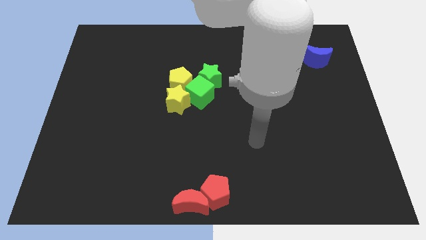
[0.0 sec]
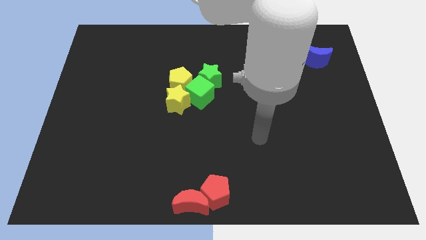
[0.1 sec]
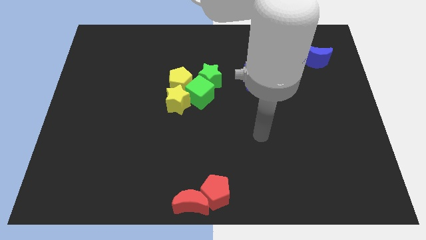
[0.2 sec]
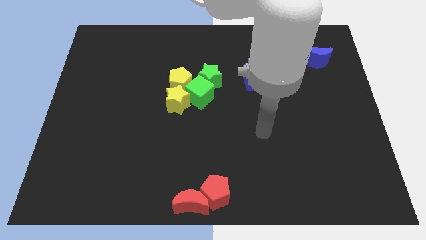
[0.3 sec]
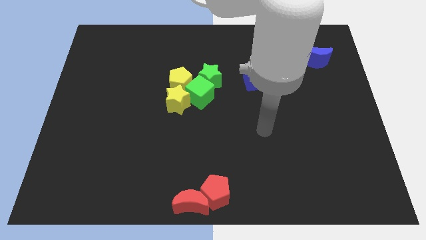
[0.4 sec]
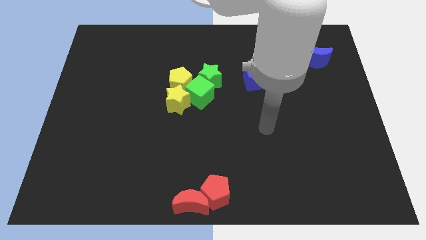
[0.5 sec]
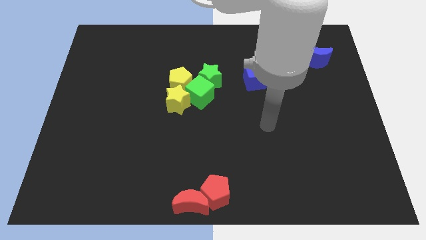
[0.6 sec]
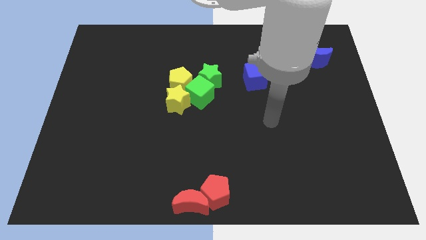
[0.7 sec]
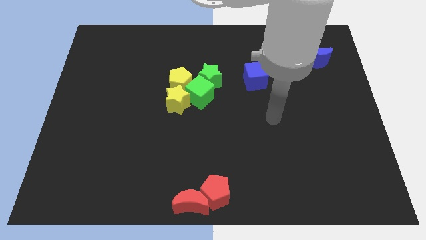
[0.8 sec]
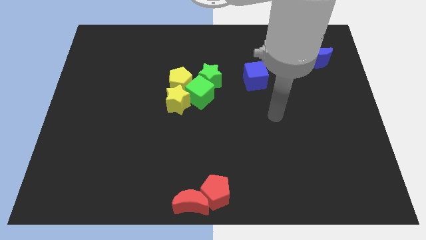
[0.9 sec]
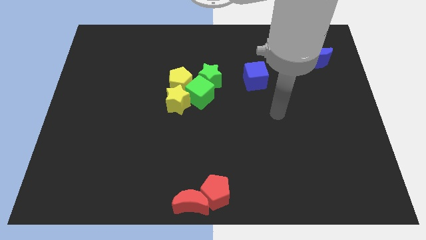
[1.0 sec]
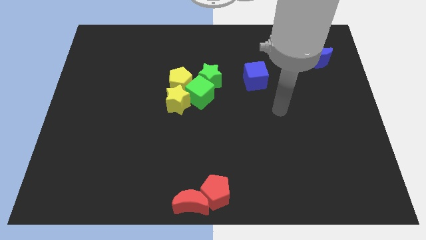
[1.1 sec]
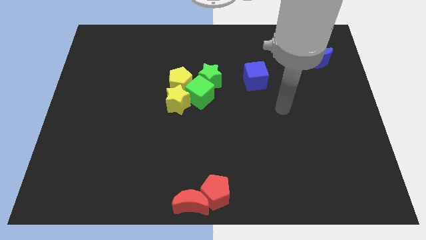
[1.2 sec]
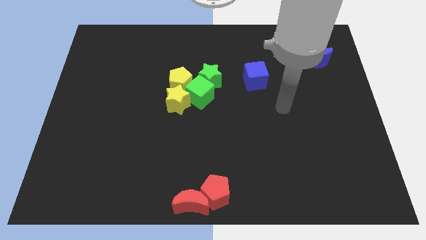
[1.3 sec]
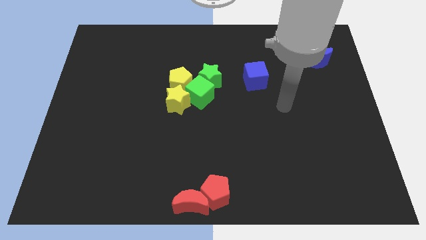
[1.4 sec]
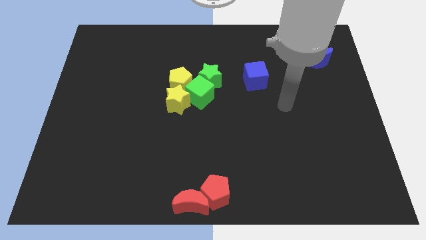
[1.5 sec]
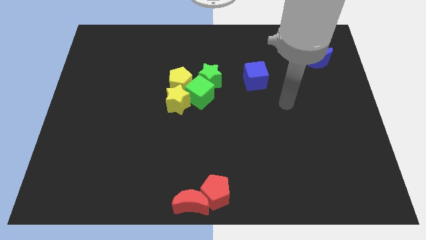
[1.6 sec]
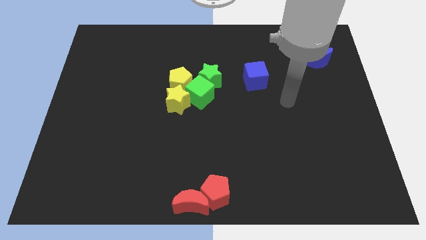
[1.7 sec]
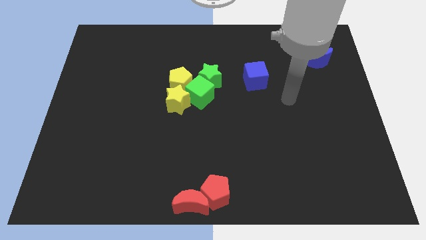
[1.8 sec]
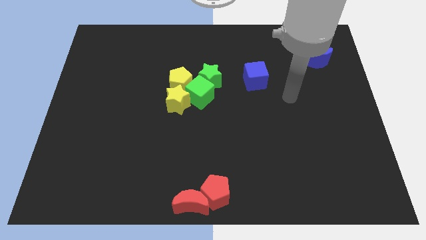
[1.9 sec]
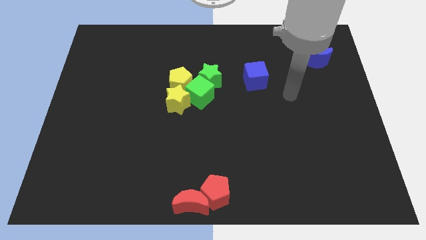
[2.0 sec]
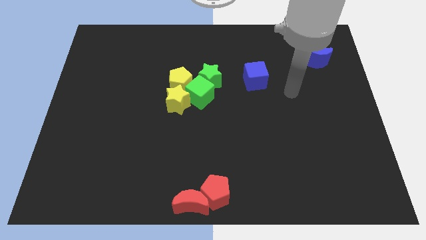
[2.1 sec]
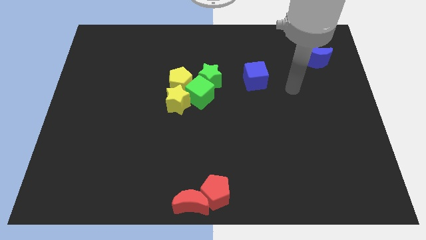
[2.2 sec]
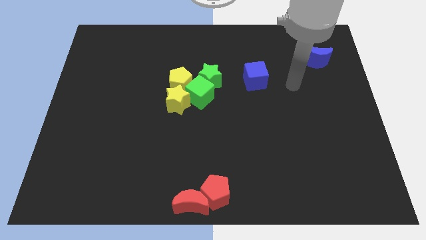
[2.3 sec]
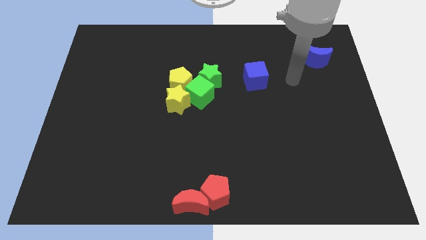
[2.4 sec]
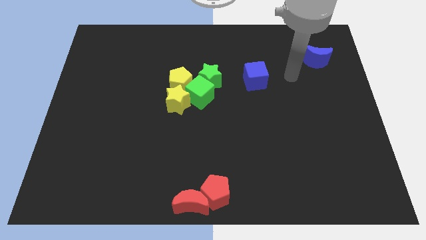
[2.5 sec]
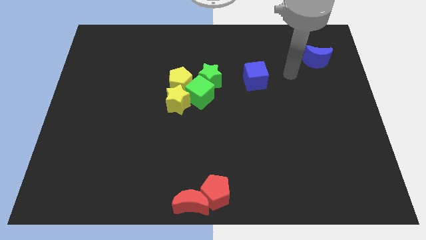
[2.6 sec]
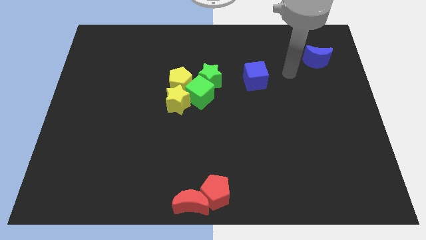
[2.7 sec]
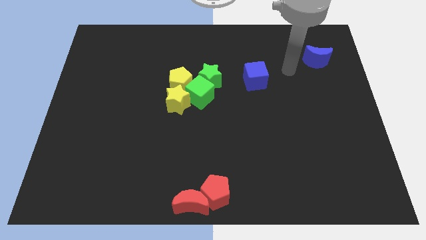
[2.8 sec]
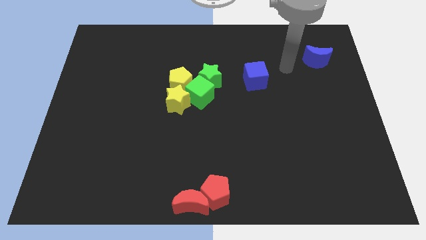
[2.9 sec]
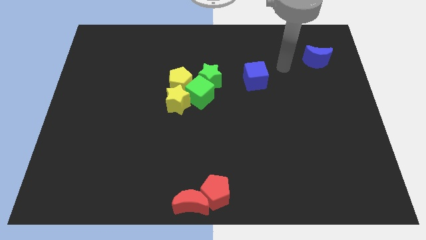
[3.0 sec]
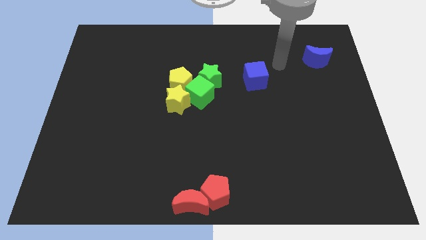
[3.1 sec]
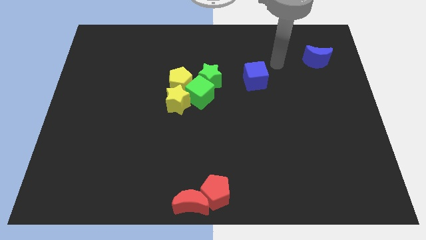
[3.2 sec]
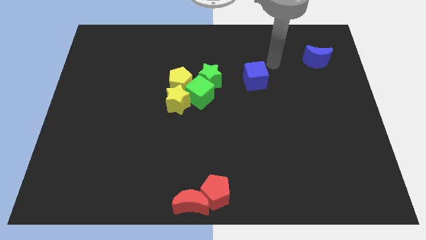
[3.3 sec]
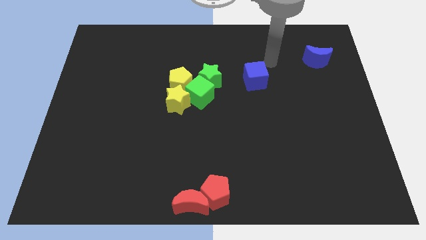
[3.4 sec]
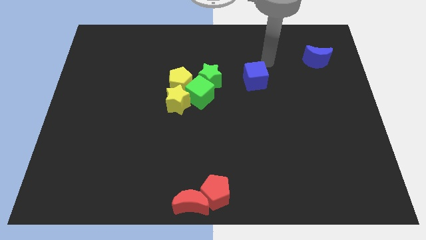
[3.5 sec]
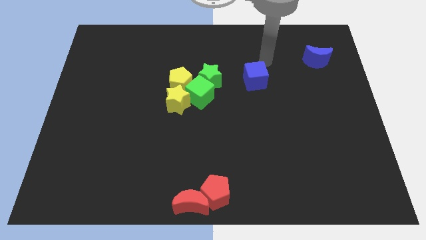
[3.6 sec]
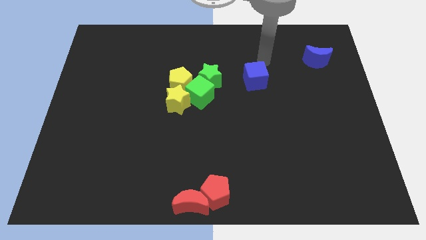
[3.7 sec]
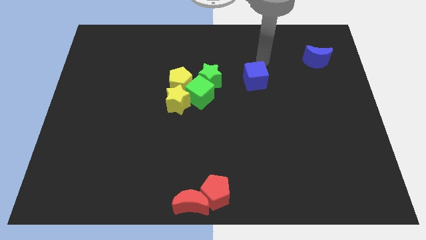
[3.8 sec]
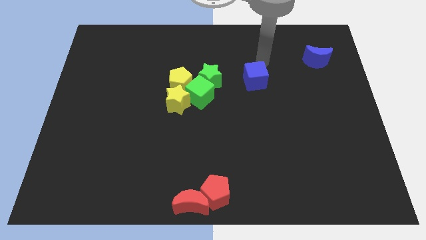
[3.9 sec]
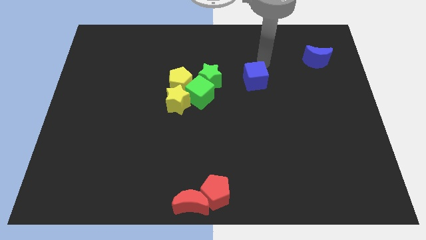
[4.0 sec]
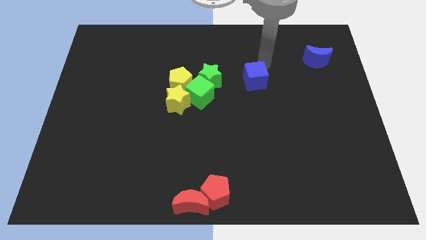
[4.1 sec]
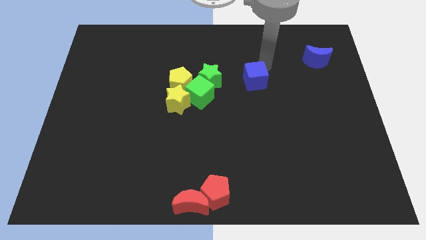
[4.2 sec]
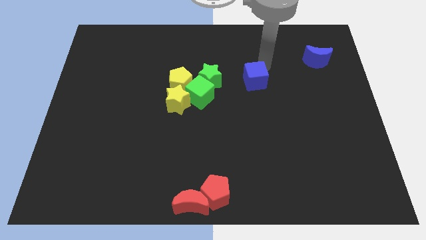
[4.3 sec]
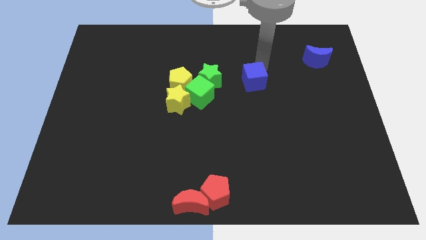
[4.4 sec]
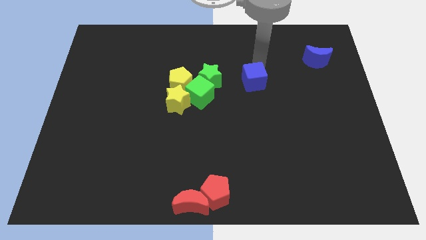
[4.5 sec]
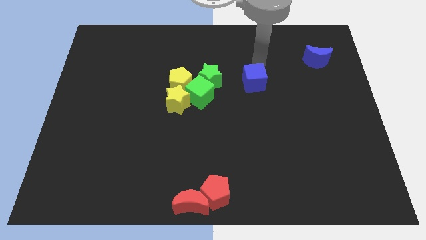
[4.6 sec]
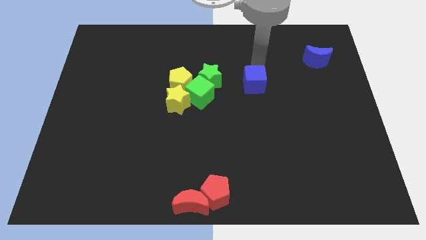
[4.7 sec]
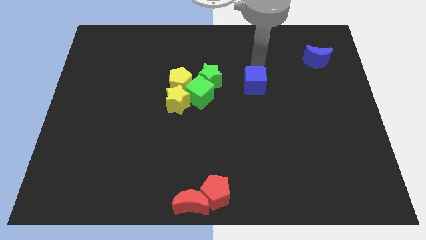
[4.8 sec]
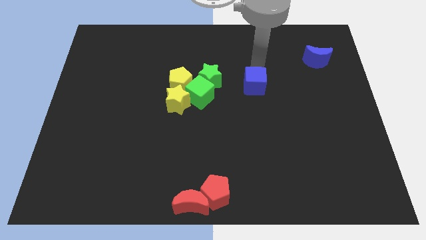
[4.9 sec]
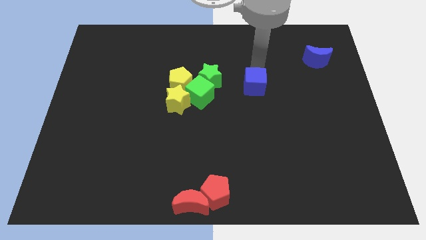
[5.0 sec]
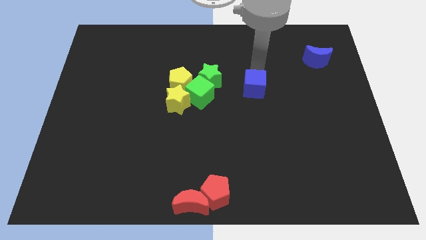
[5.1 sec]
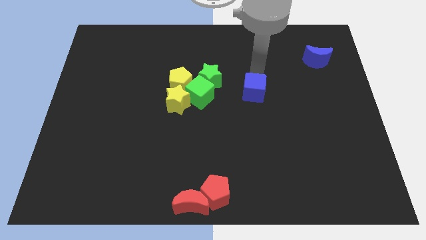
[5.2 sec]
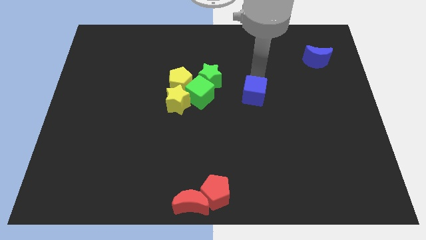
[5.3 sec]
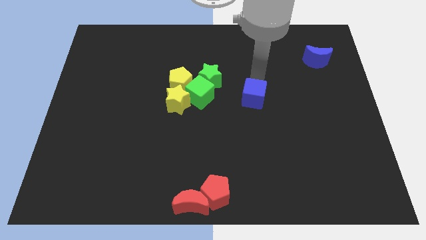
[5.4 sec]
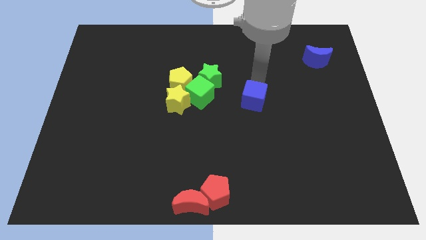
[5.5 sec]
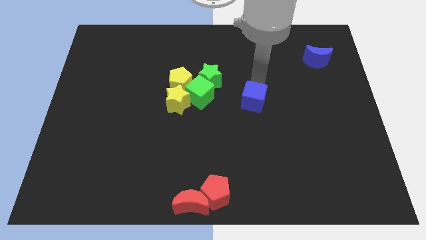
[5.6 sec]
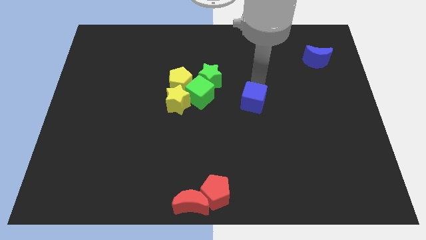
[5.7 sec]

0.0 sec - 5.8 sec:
push the blue cube to the right of the green cube

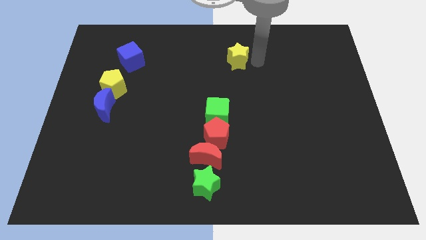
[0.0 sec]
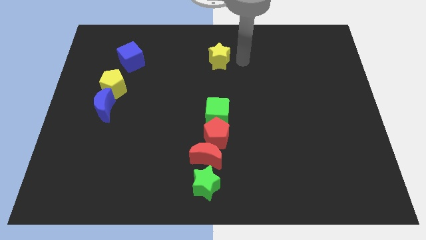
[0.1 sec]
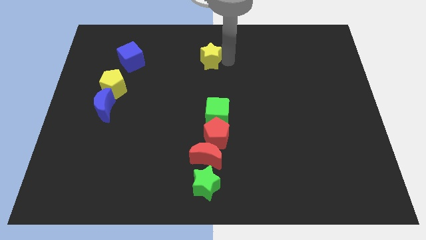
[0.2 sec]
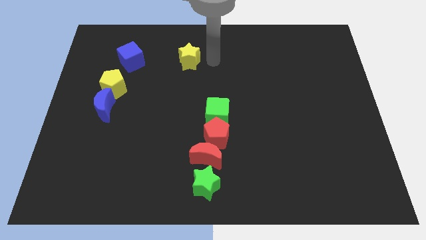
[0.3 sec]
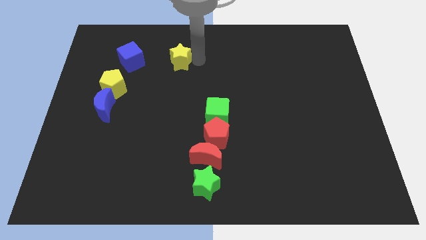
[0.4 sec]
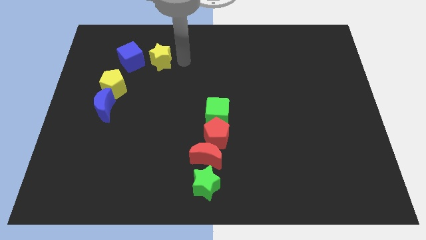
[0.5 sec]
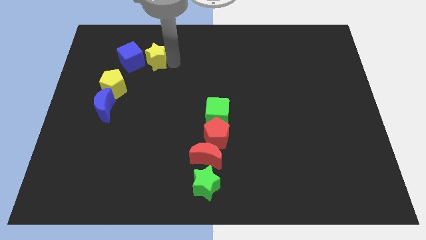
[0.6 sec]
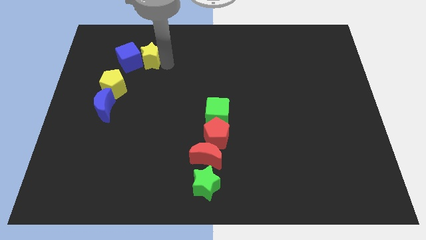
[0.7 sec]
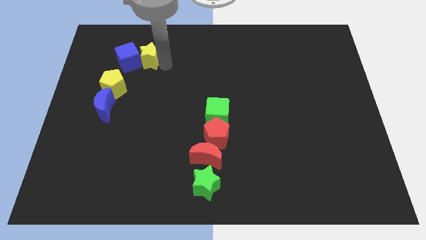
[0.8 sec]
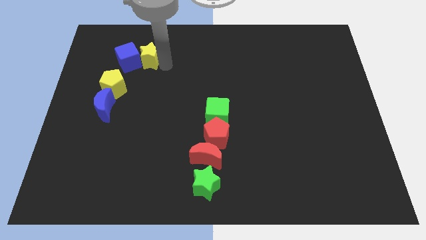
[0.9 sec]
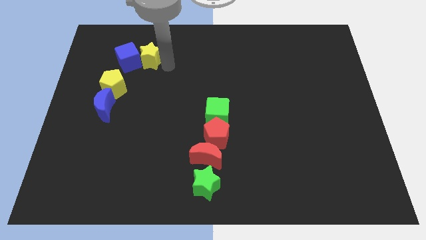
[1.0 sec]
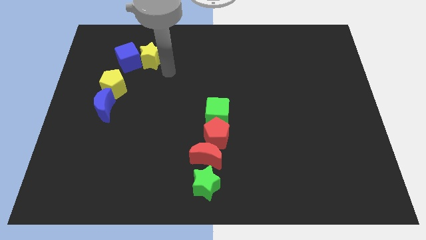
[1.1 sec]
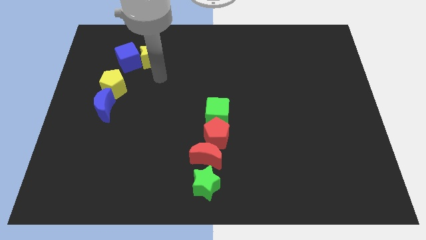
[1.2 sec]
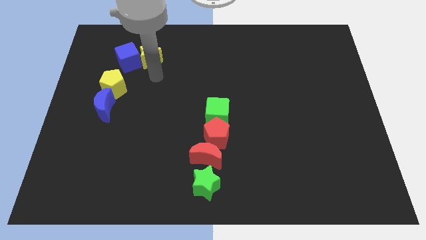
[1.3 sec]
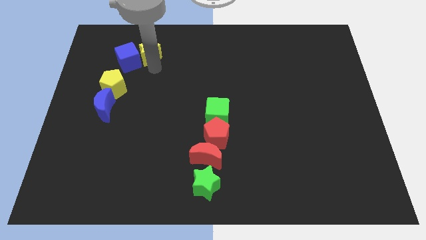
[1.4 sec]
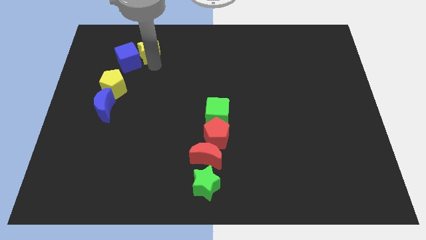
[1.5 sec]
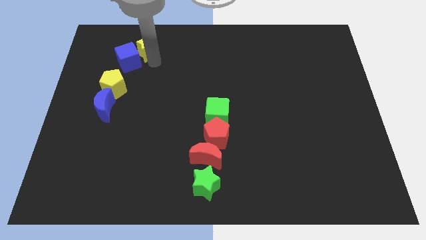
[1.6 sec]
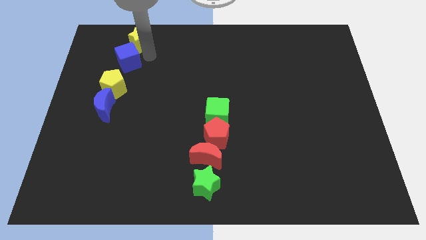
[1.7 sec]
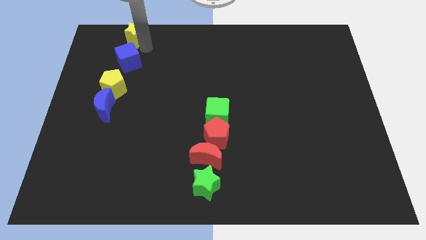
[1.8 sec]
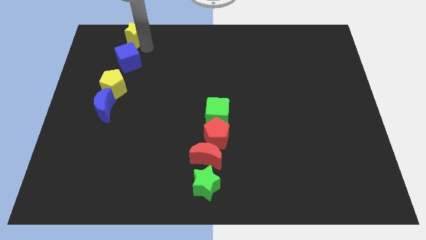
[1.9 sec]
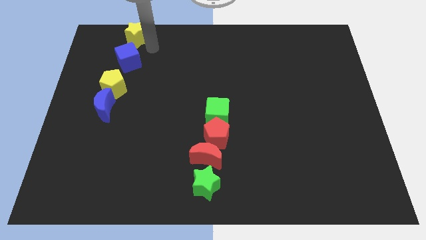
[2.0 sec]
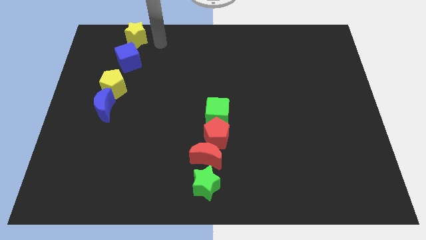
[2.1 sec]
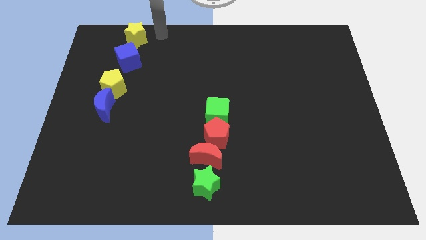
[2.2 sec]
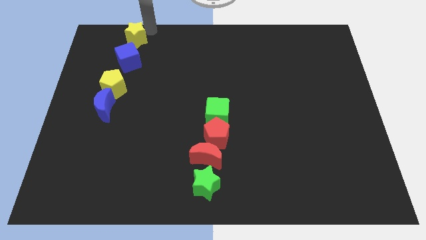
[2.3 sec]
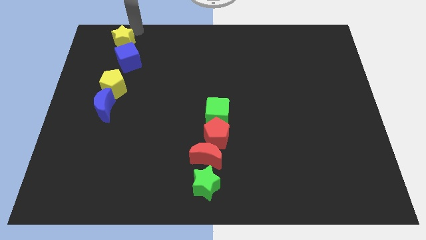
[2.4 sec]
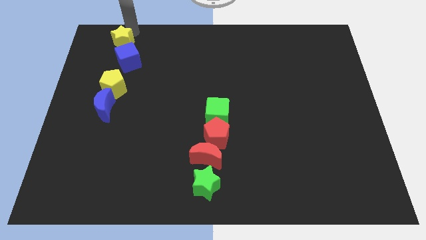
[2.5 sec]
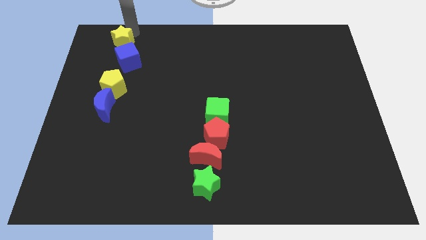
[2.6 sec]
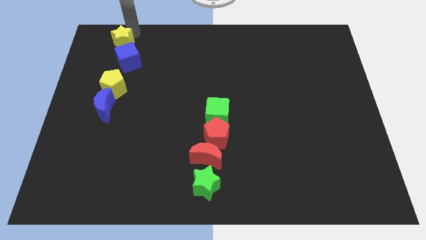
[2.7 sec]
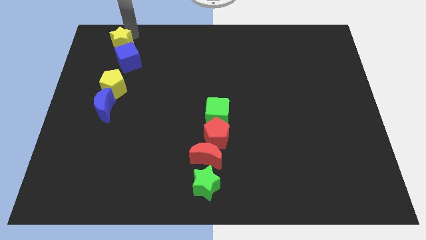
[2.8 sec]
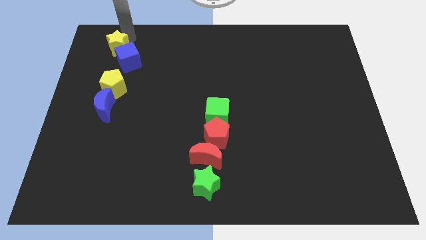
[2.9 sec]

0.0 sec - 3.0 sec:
place the yellow star above the blue cube

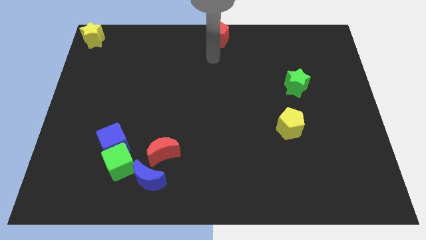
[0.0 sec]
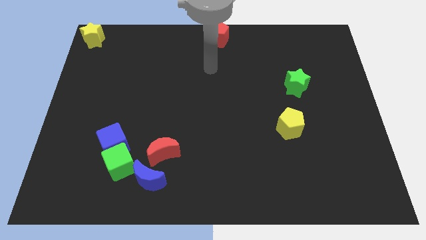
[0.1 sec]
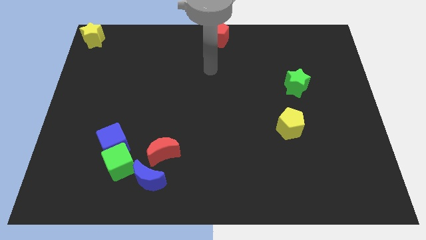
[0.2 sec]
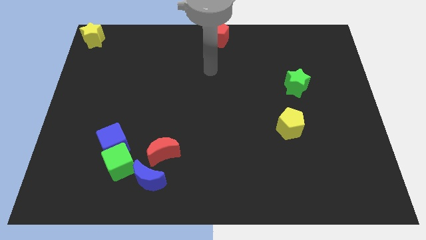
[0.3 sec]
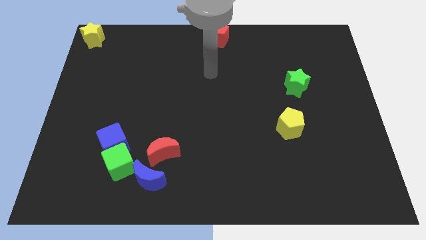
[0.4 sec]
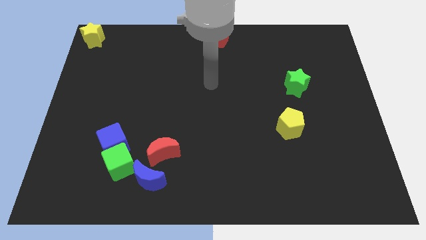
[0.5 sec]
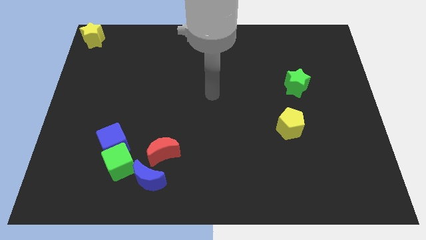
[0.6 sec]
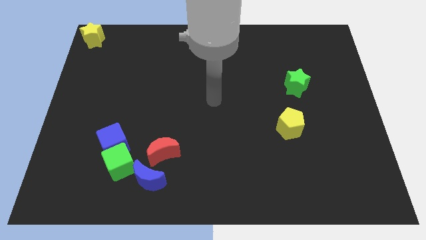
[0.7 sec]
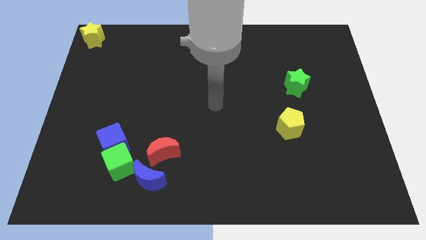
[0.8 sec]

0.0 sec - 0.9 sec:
place your hand at center of the board
